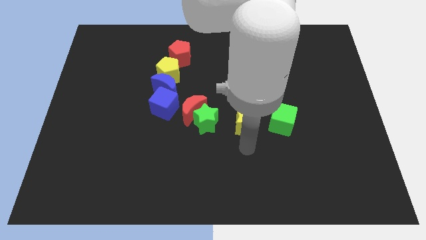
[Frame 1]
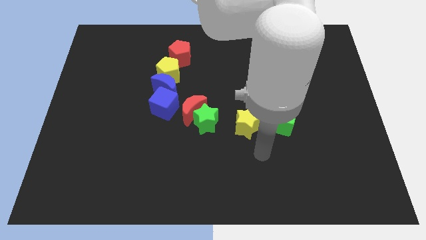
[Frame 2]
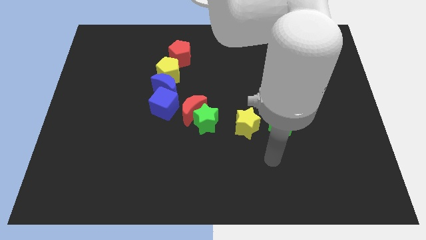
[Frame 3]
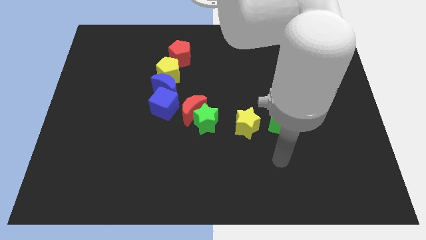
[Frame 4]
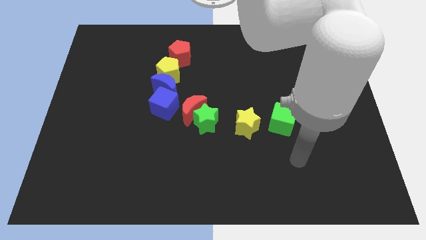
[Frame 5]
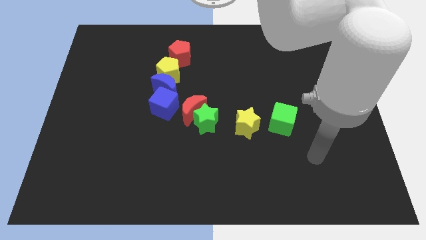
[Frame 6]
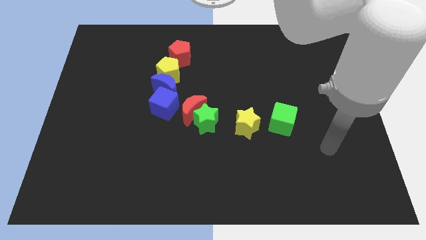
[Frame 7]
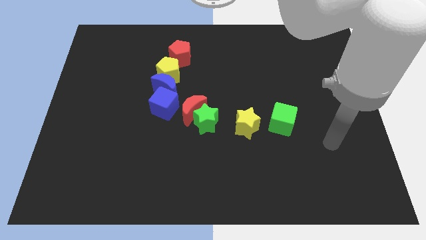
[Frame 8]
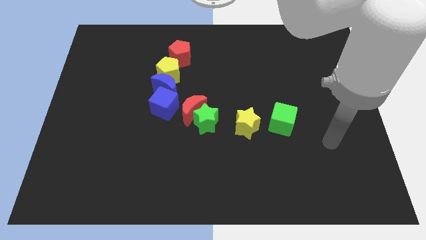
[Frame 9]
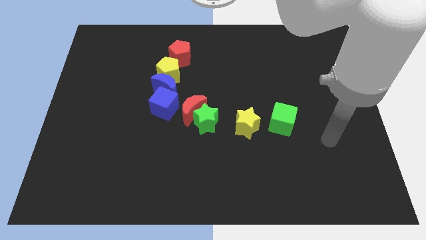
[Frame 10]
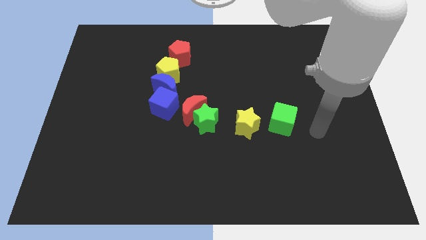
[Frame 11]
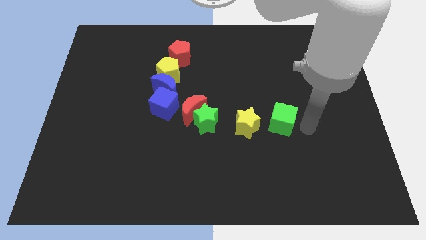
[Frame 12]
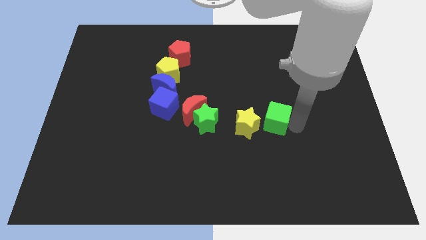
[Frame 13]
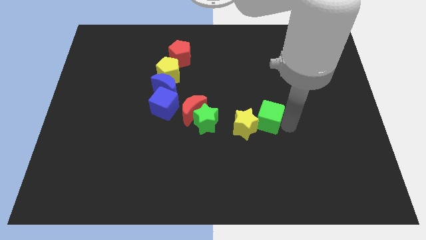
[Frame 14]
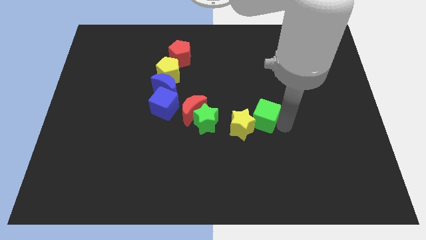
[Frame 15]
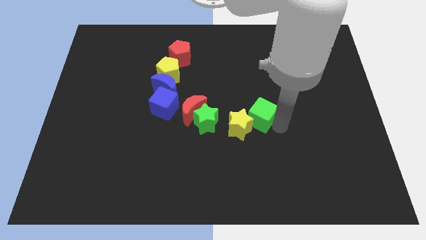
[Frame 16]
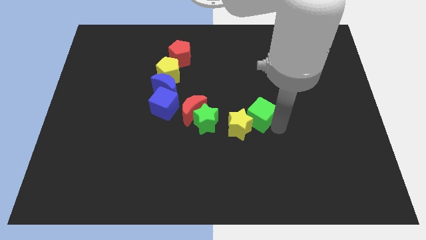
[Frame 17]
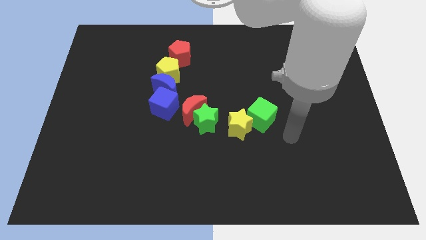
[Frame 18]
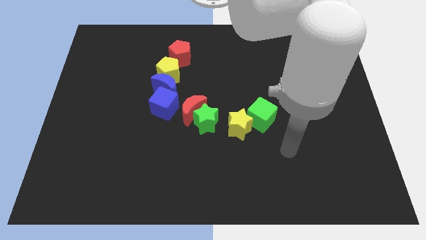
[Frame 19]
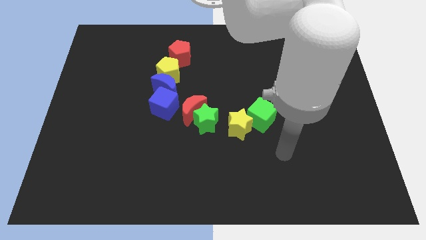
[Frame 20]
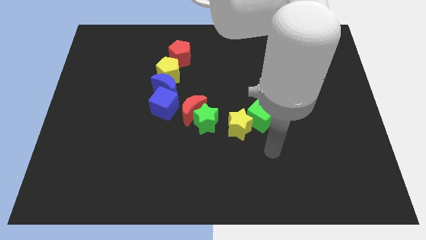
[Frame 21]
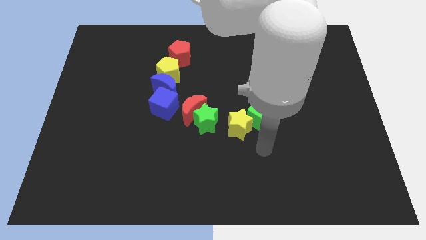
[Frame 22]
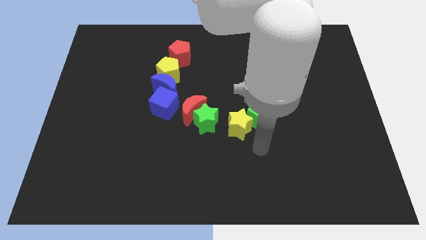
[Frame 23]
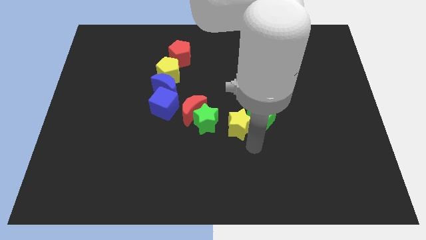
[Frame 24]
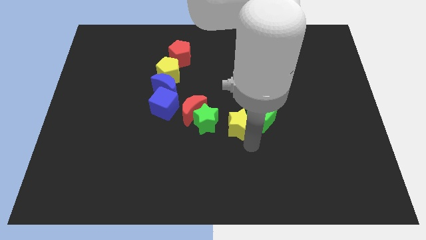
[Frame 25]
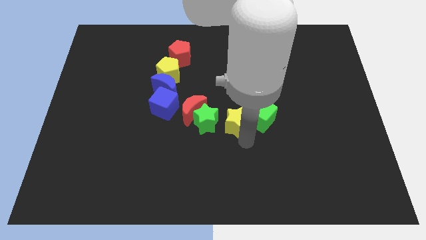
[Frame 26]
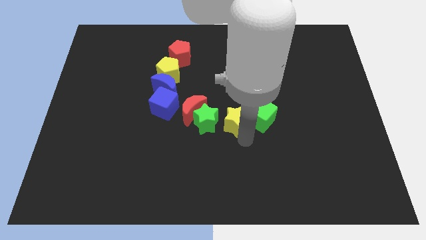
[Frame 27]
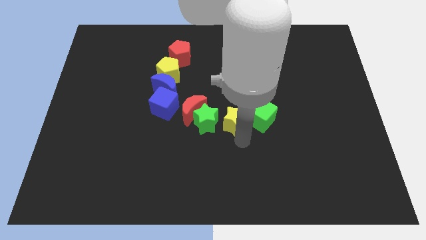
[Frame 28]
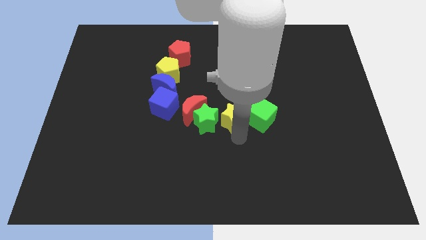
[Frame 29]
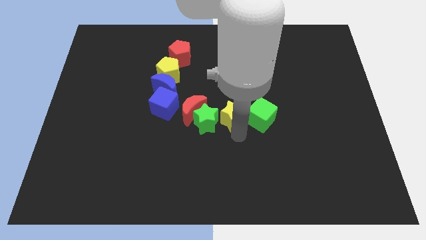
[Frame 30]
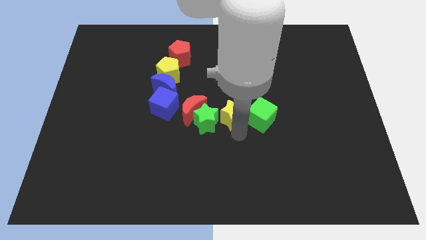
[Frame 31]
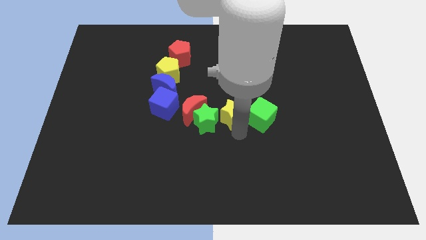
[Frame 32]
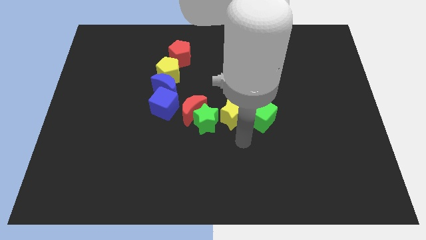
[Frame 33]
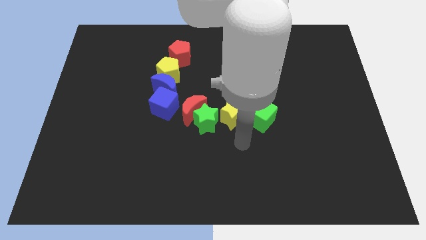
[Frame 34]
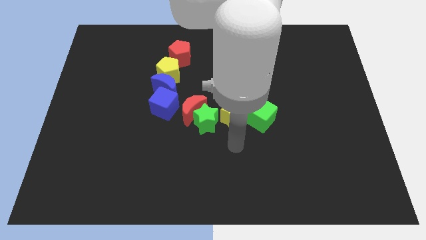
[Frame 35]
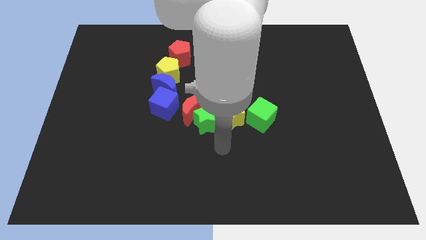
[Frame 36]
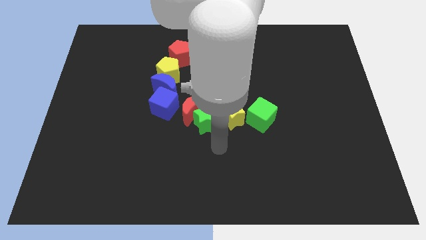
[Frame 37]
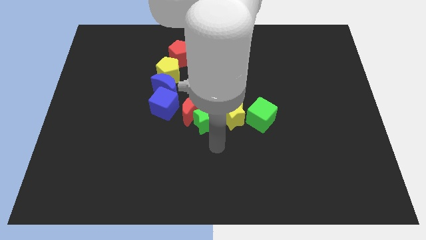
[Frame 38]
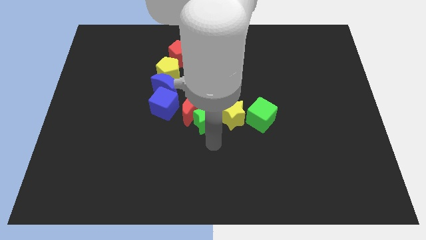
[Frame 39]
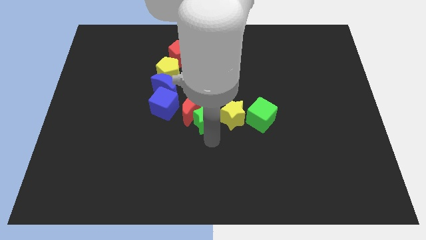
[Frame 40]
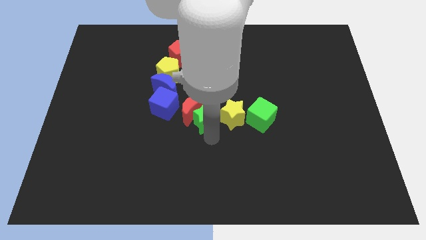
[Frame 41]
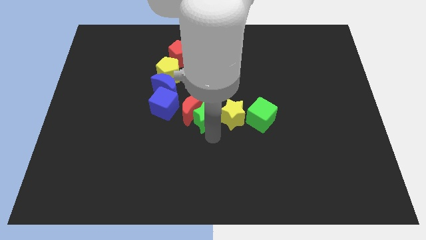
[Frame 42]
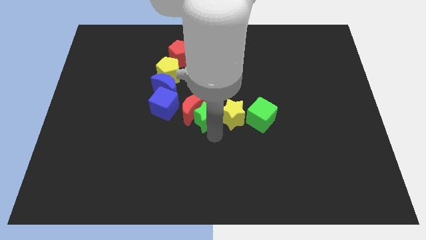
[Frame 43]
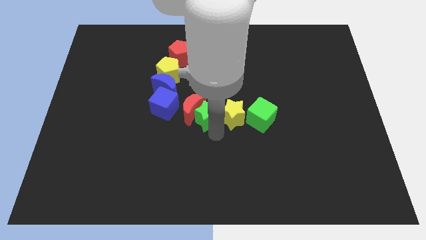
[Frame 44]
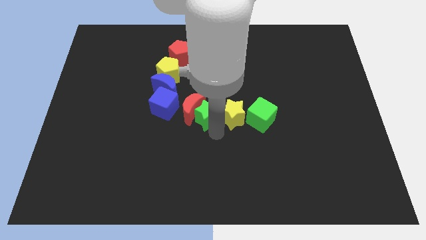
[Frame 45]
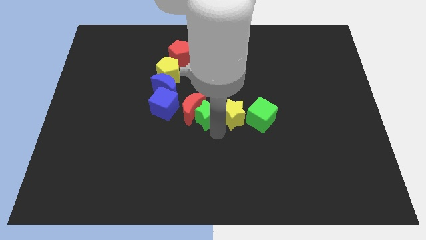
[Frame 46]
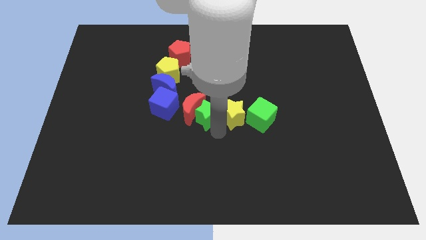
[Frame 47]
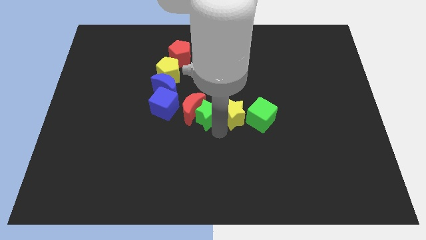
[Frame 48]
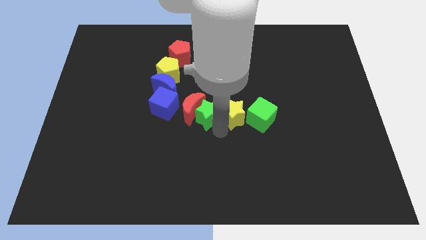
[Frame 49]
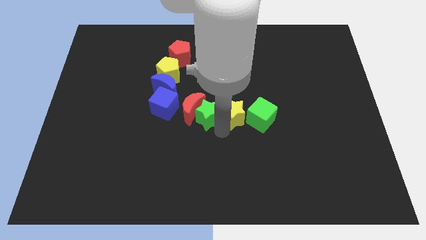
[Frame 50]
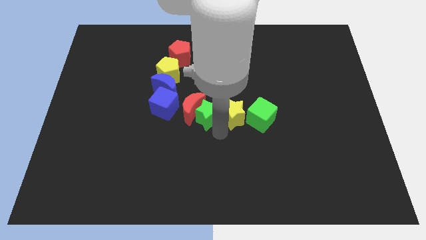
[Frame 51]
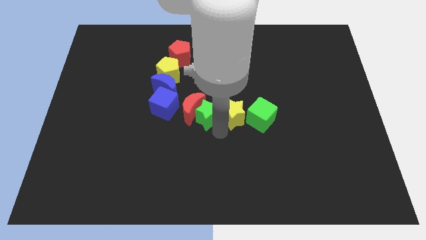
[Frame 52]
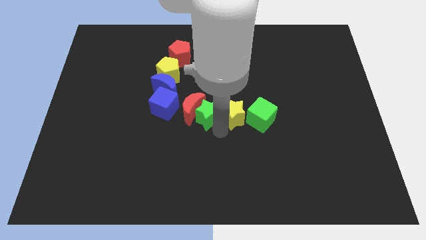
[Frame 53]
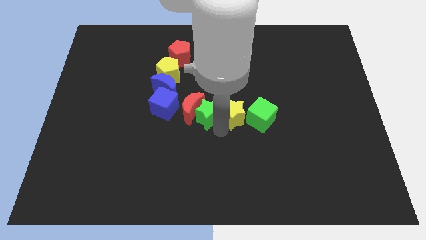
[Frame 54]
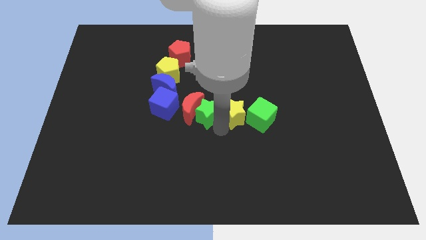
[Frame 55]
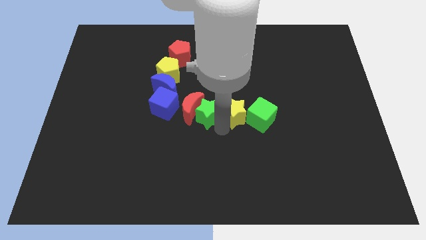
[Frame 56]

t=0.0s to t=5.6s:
arrange the green cube yellow star and green star horizontally at the right side of the red moon

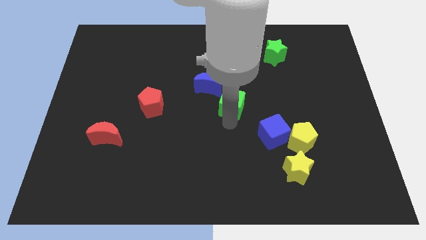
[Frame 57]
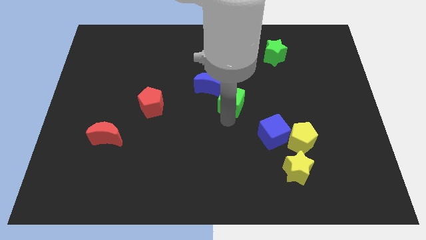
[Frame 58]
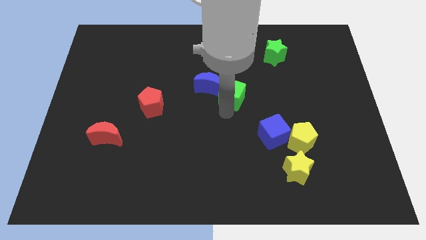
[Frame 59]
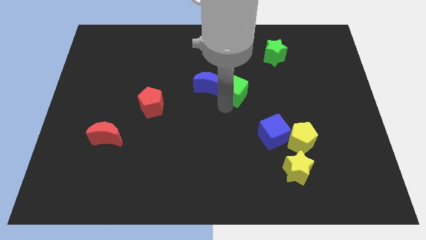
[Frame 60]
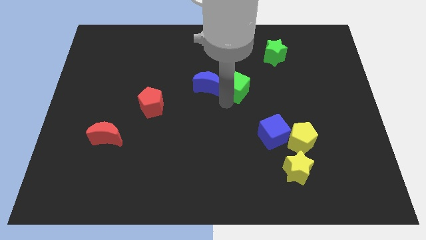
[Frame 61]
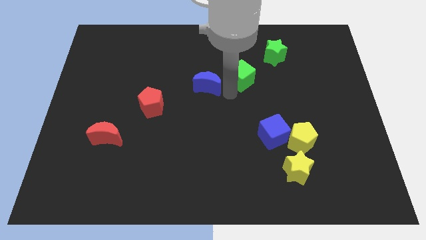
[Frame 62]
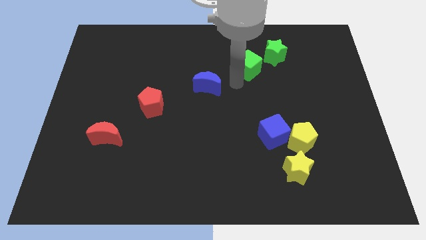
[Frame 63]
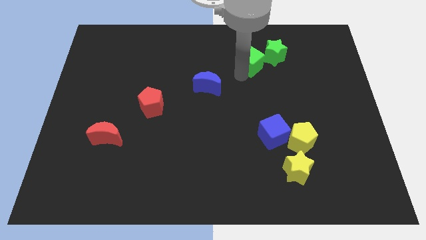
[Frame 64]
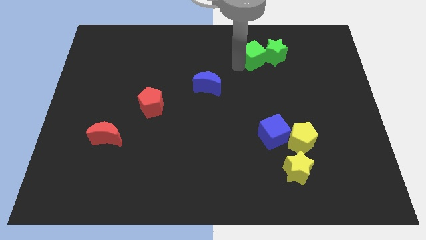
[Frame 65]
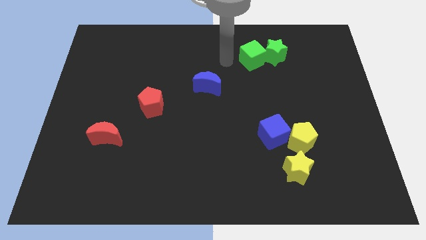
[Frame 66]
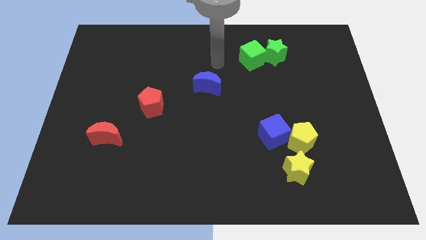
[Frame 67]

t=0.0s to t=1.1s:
drag the green cube into the green star

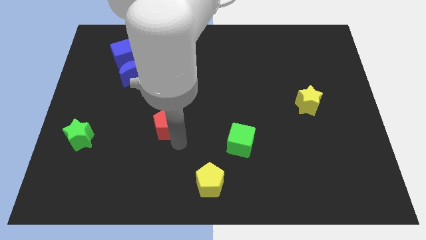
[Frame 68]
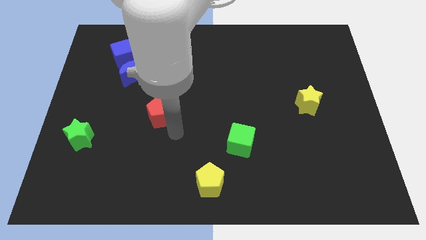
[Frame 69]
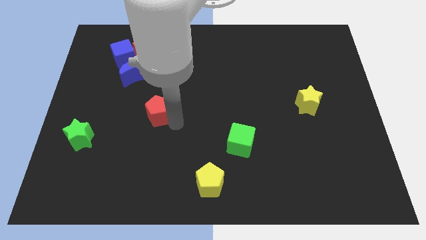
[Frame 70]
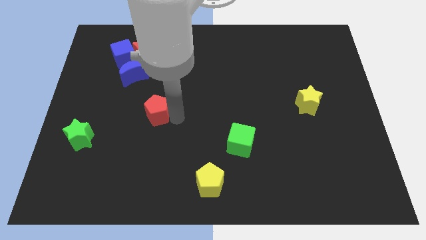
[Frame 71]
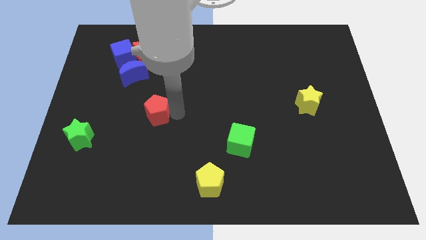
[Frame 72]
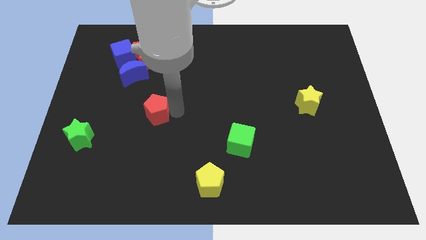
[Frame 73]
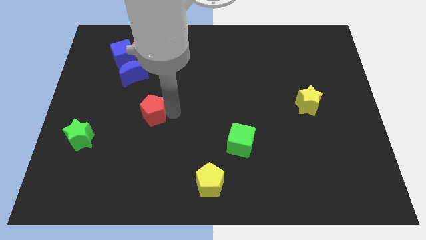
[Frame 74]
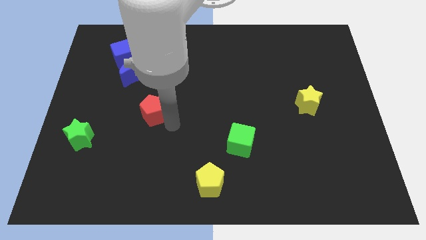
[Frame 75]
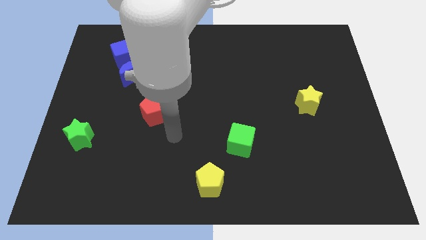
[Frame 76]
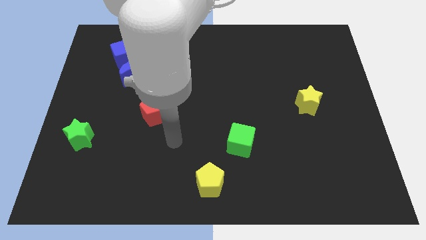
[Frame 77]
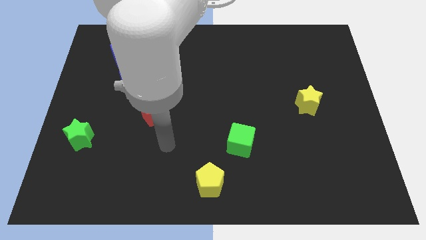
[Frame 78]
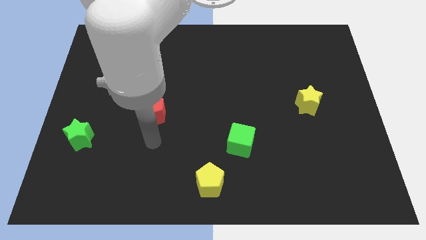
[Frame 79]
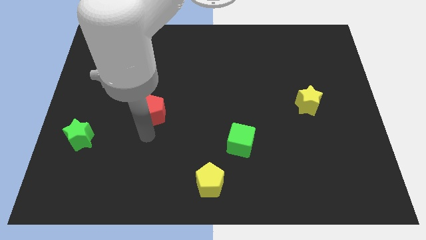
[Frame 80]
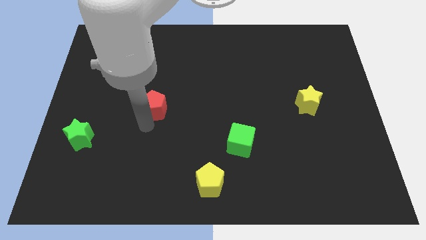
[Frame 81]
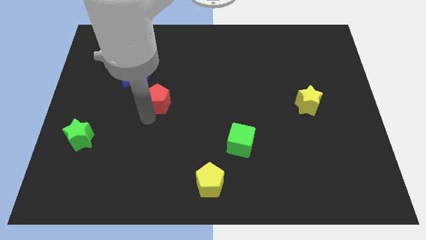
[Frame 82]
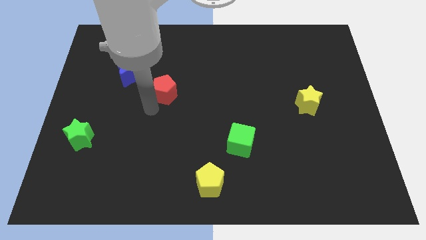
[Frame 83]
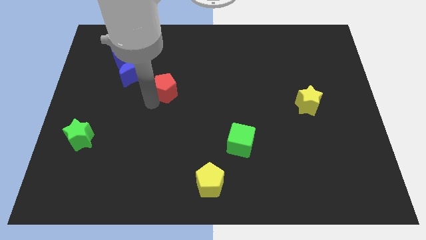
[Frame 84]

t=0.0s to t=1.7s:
slide the red pentagon towards the top

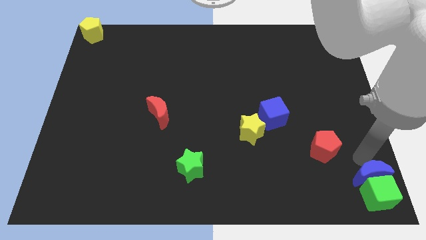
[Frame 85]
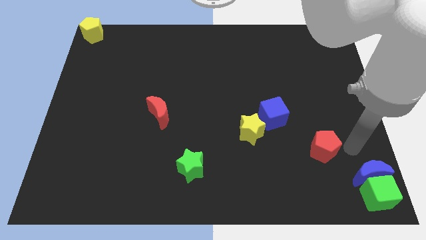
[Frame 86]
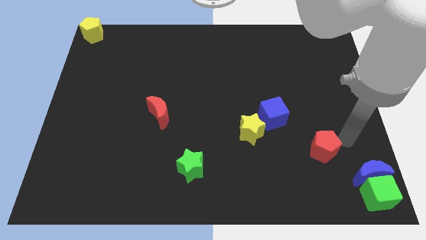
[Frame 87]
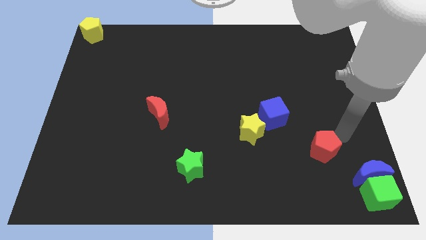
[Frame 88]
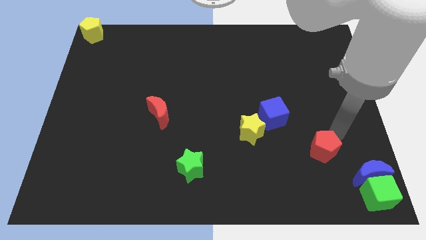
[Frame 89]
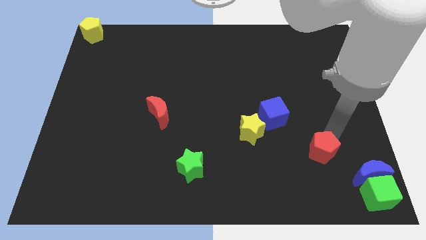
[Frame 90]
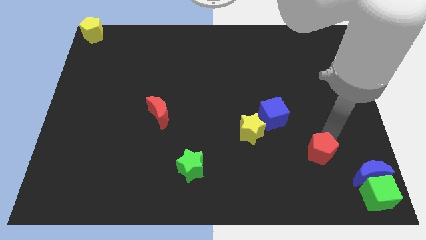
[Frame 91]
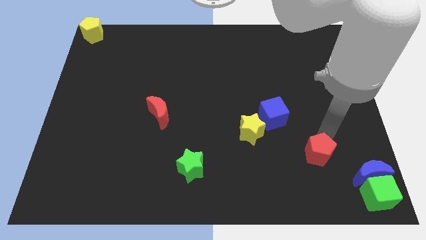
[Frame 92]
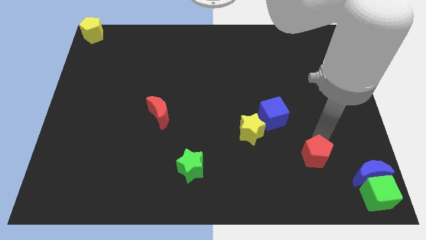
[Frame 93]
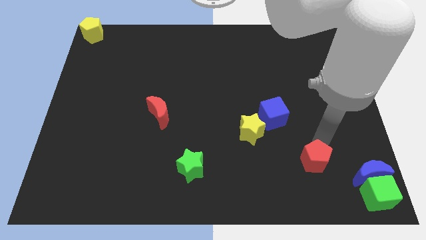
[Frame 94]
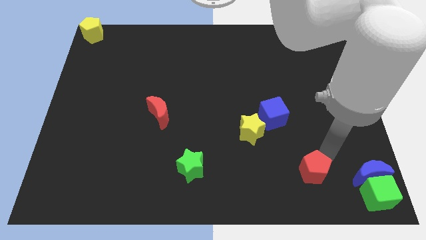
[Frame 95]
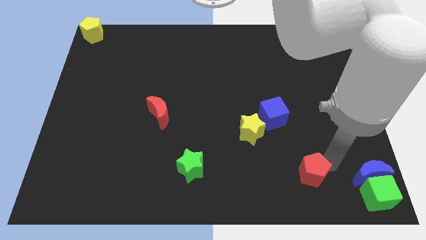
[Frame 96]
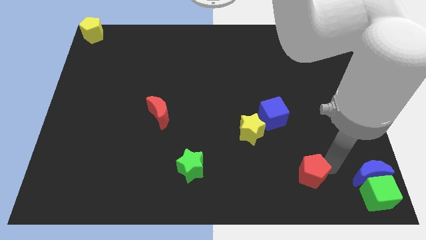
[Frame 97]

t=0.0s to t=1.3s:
place the red pentagon to the left side of the blue moon
